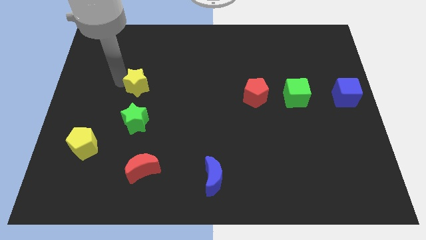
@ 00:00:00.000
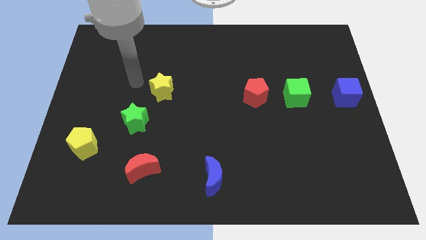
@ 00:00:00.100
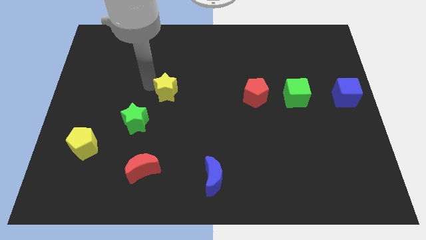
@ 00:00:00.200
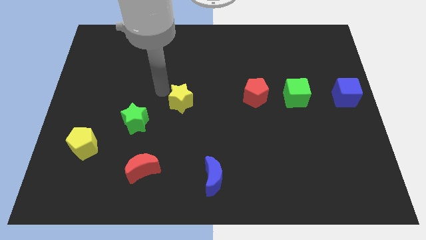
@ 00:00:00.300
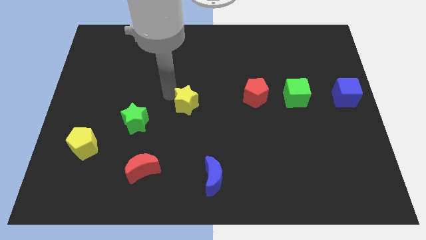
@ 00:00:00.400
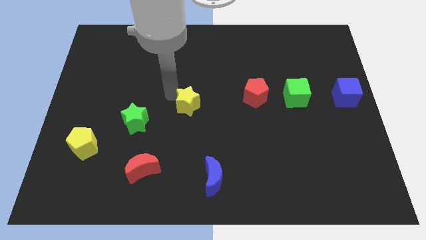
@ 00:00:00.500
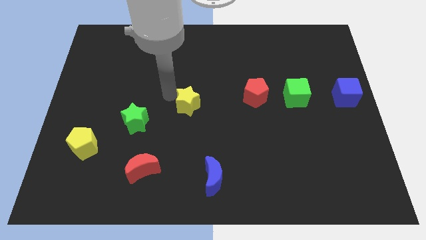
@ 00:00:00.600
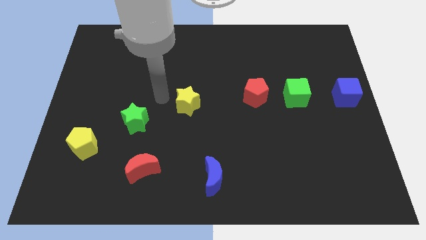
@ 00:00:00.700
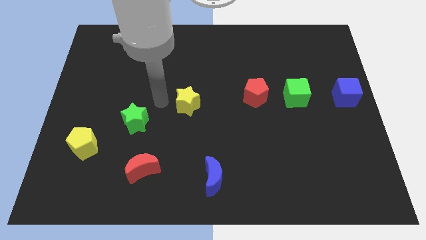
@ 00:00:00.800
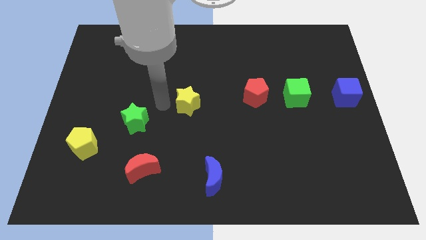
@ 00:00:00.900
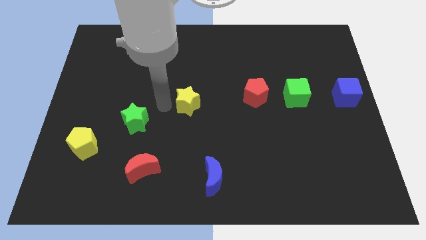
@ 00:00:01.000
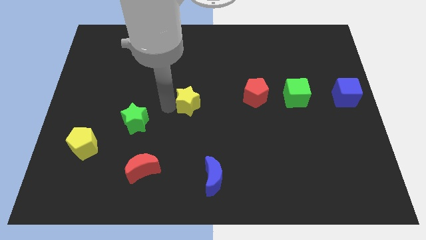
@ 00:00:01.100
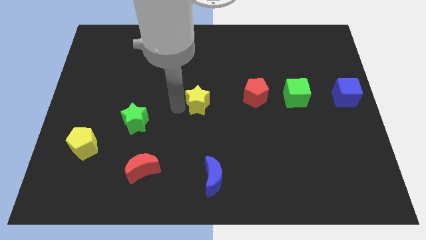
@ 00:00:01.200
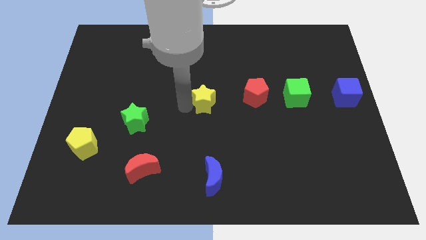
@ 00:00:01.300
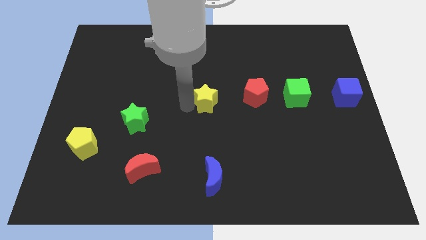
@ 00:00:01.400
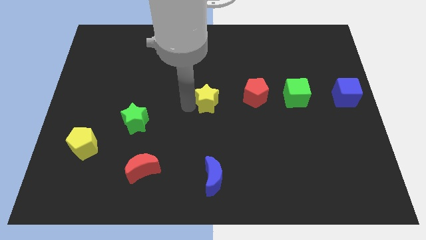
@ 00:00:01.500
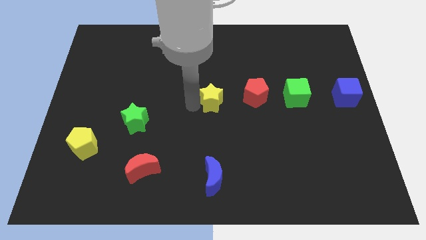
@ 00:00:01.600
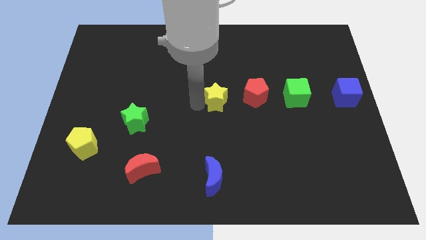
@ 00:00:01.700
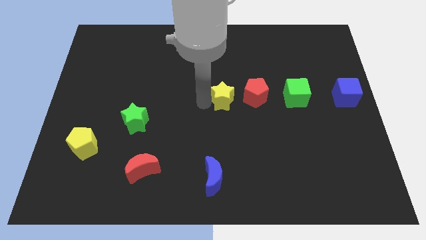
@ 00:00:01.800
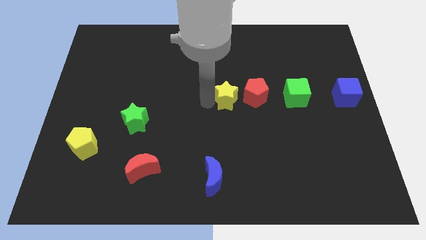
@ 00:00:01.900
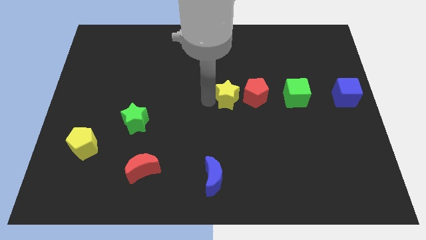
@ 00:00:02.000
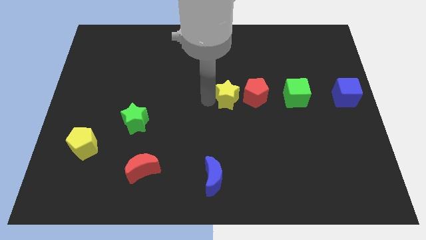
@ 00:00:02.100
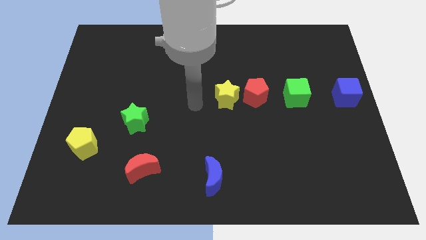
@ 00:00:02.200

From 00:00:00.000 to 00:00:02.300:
place the yellow star towards the center of the board

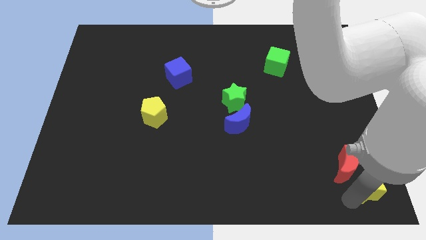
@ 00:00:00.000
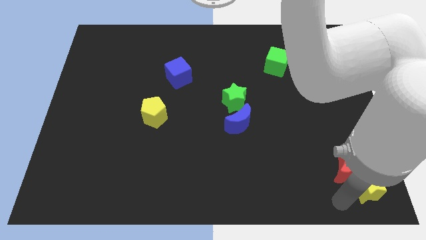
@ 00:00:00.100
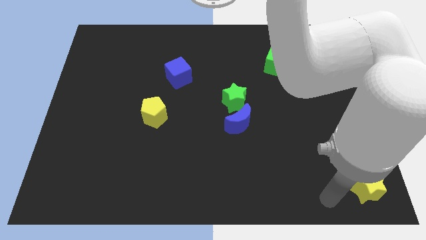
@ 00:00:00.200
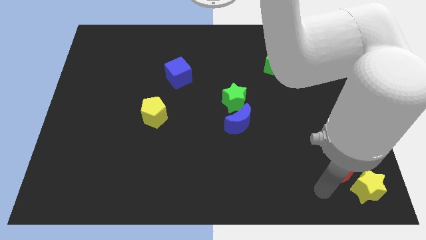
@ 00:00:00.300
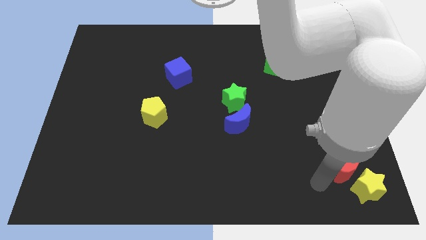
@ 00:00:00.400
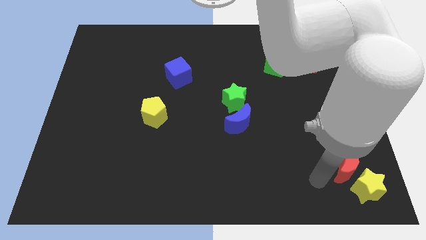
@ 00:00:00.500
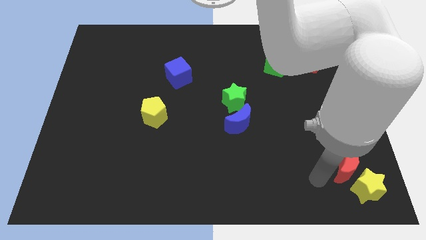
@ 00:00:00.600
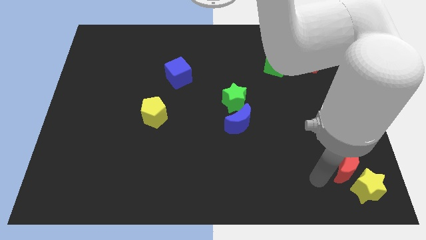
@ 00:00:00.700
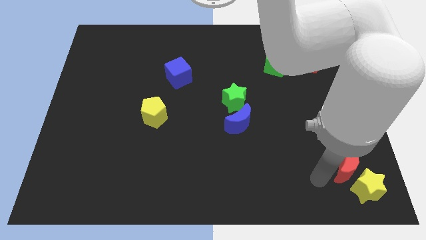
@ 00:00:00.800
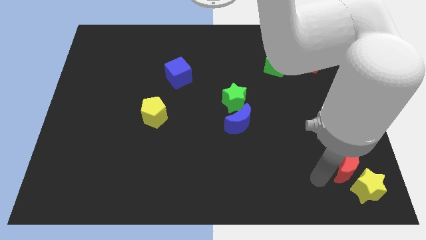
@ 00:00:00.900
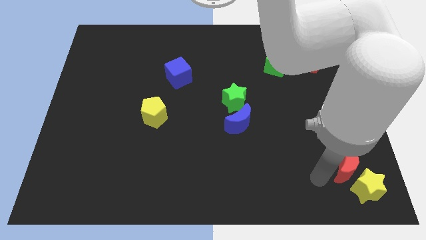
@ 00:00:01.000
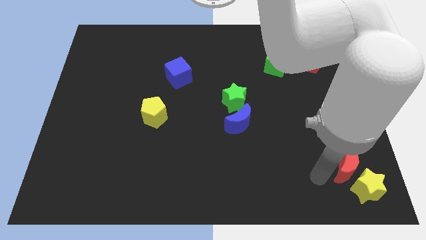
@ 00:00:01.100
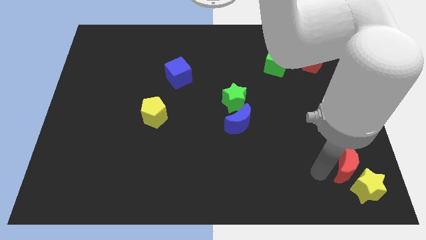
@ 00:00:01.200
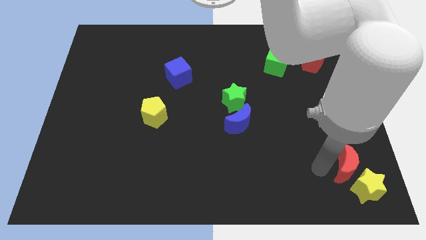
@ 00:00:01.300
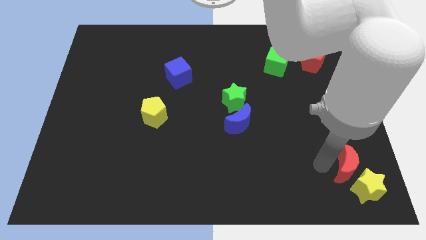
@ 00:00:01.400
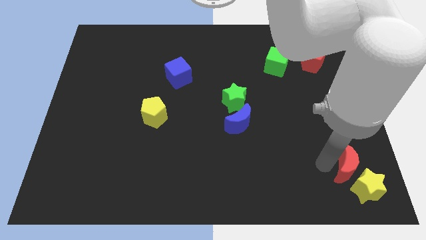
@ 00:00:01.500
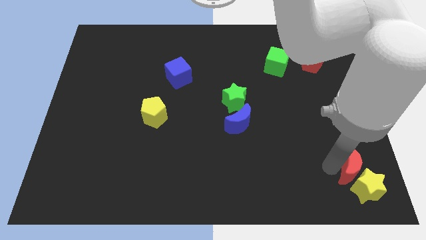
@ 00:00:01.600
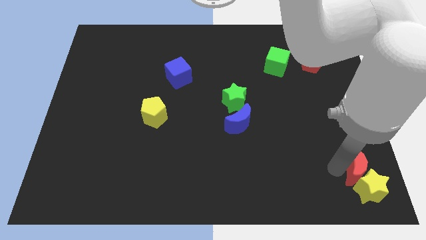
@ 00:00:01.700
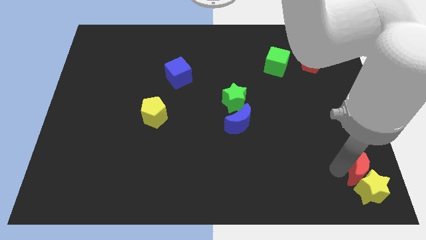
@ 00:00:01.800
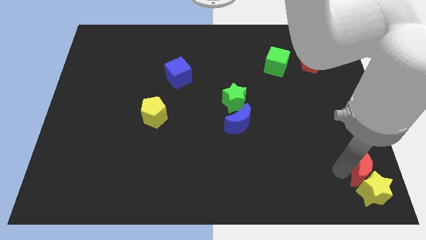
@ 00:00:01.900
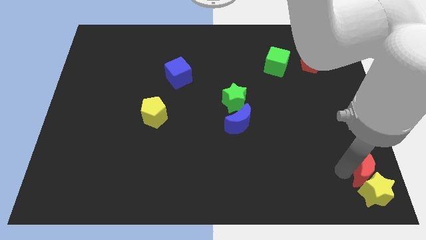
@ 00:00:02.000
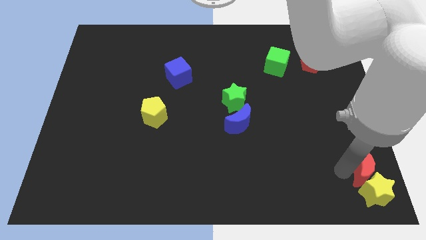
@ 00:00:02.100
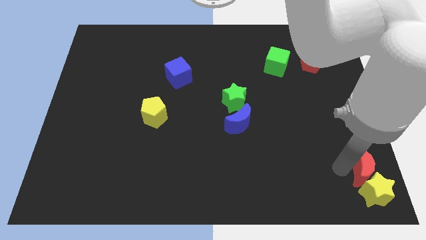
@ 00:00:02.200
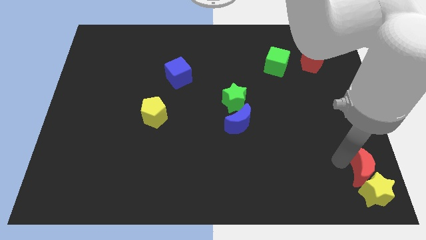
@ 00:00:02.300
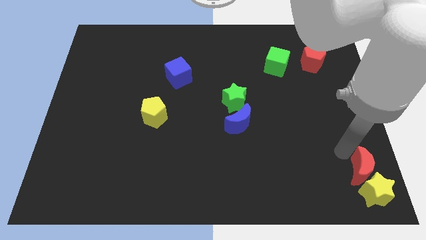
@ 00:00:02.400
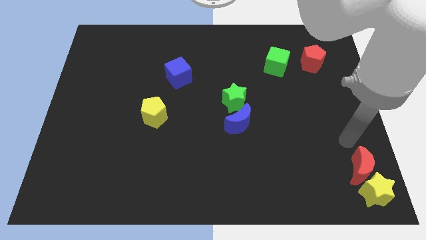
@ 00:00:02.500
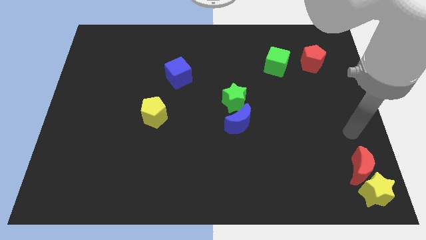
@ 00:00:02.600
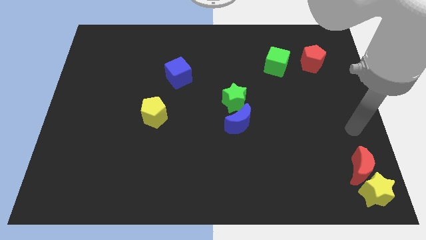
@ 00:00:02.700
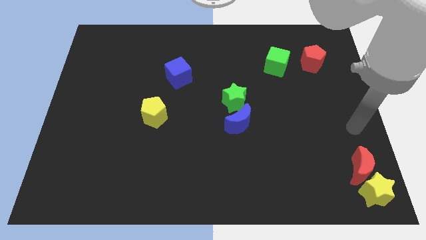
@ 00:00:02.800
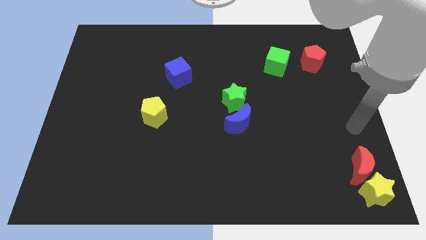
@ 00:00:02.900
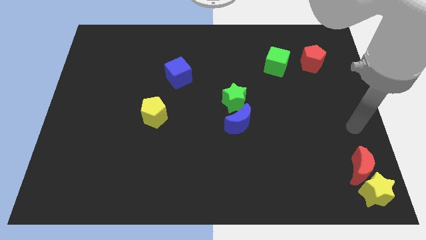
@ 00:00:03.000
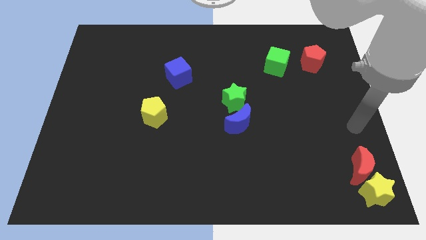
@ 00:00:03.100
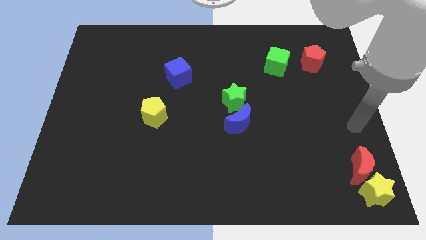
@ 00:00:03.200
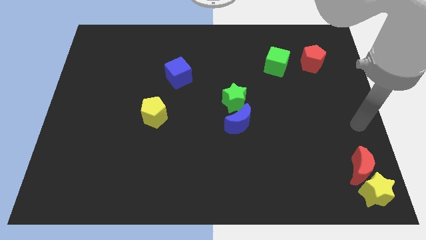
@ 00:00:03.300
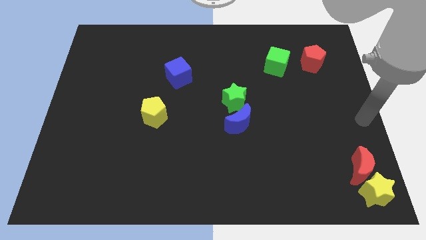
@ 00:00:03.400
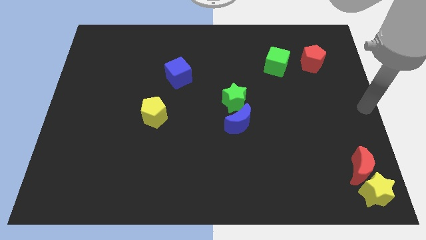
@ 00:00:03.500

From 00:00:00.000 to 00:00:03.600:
push the red moon on the top of the yellow star

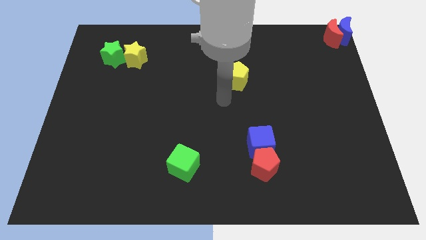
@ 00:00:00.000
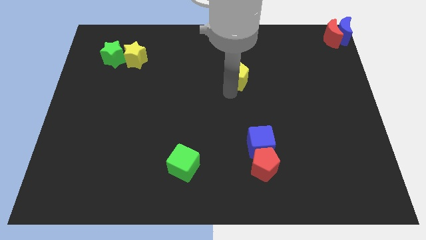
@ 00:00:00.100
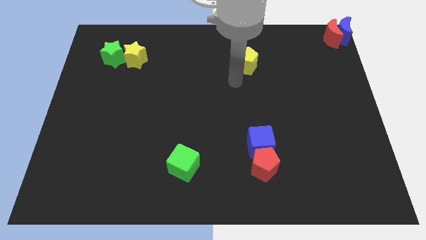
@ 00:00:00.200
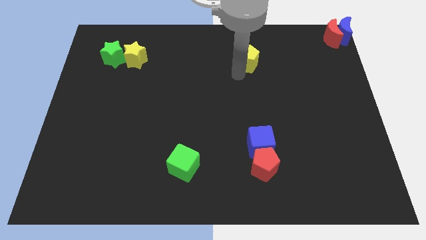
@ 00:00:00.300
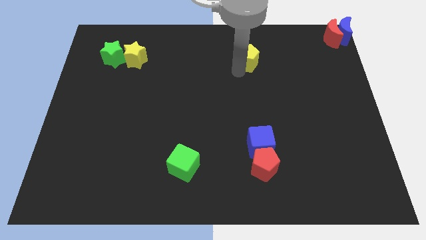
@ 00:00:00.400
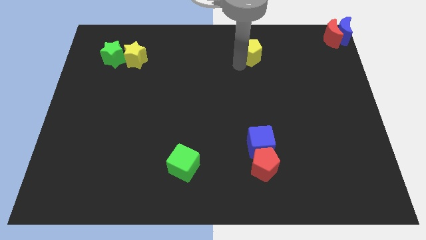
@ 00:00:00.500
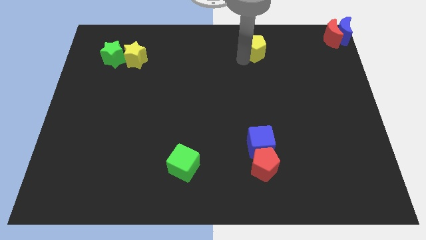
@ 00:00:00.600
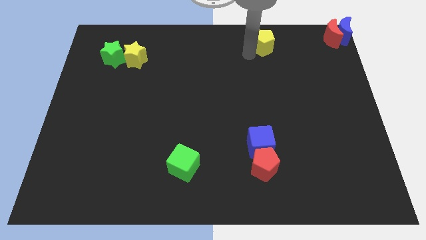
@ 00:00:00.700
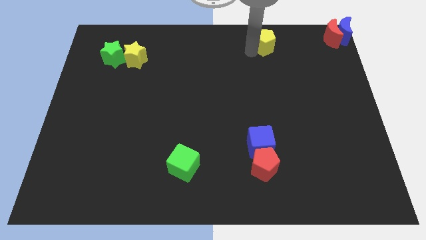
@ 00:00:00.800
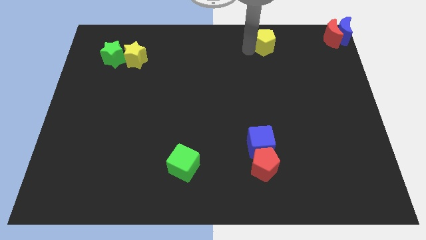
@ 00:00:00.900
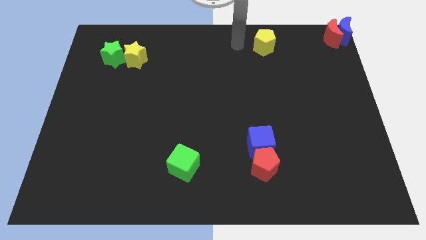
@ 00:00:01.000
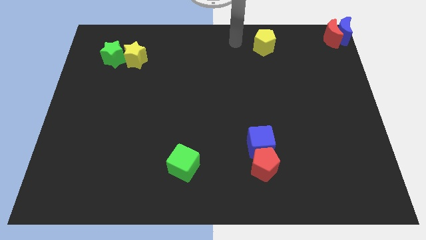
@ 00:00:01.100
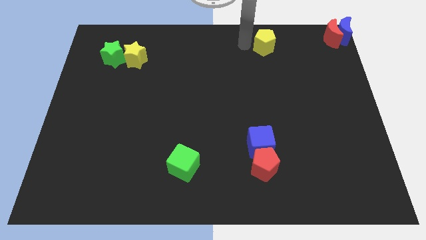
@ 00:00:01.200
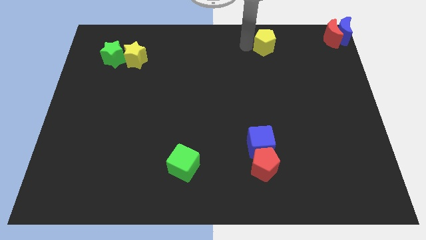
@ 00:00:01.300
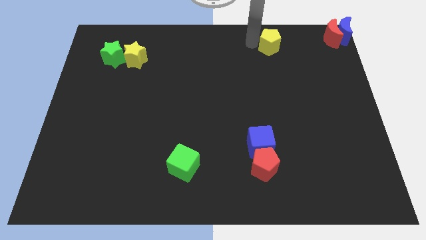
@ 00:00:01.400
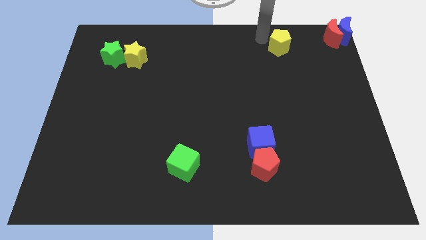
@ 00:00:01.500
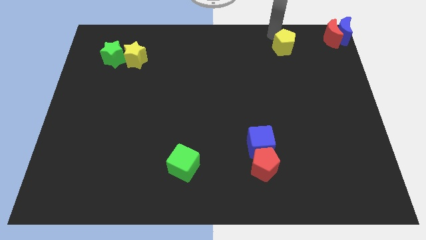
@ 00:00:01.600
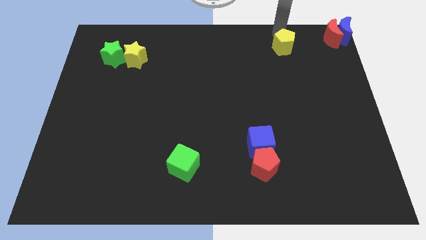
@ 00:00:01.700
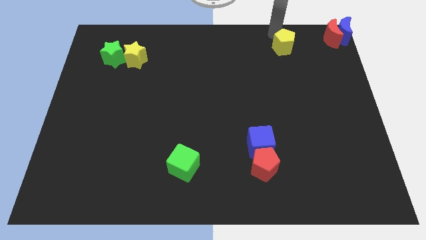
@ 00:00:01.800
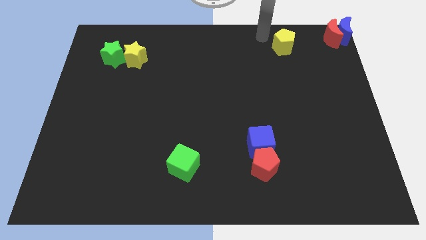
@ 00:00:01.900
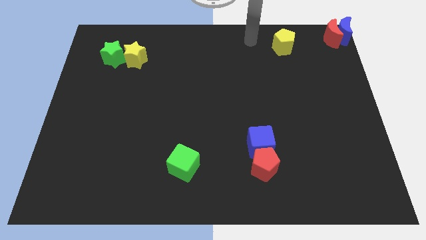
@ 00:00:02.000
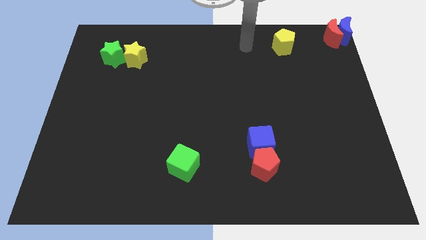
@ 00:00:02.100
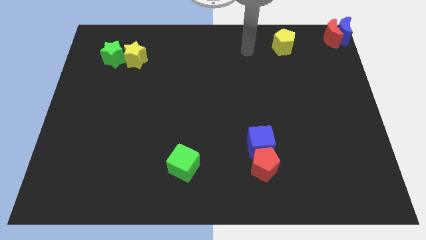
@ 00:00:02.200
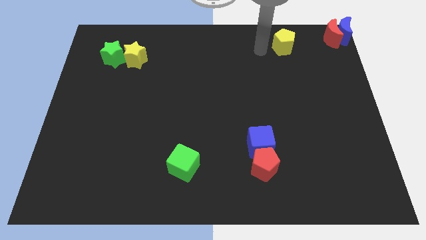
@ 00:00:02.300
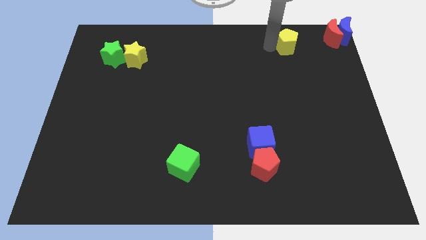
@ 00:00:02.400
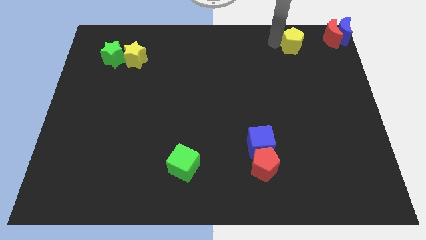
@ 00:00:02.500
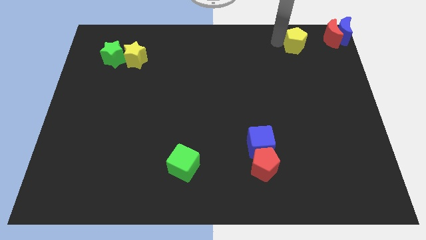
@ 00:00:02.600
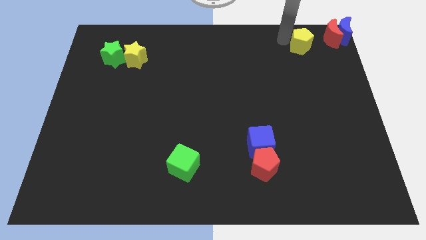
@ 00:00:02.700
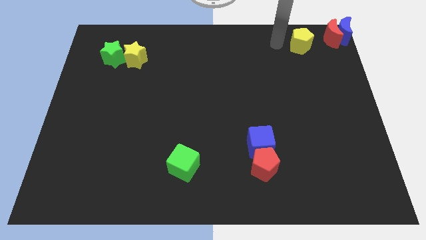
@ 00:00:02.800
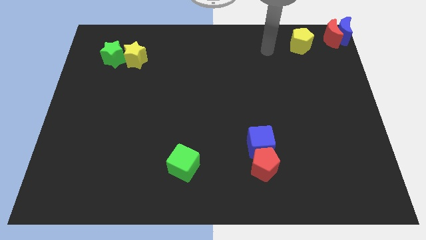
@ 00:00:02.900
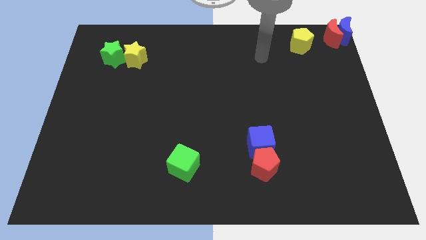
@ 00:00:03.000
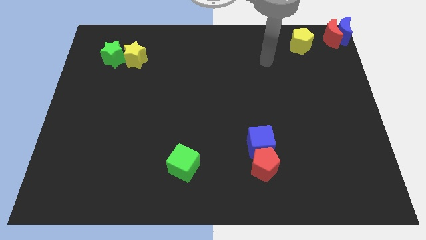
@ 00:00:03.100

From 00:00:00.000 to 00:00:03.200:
push the yellow pentagon towards the top right corner of the board
